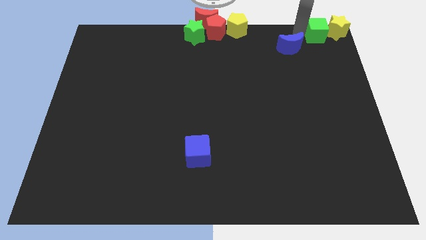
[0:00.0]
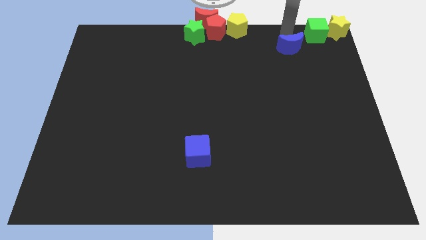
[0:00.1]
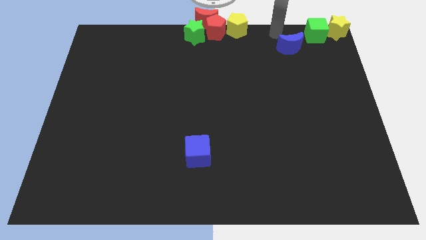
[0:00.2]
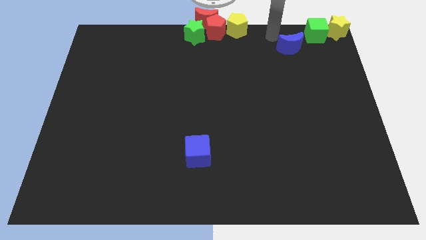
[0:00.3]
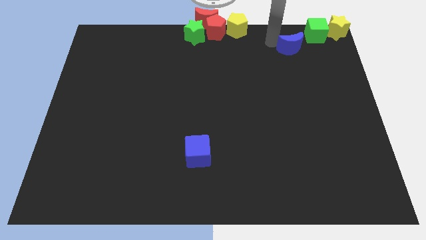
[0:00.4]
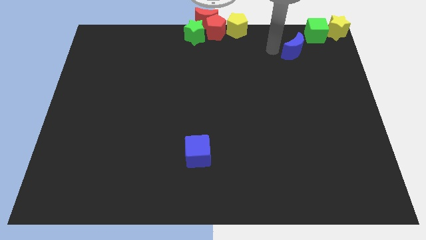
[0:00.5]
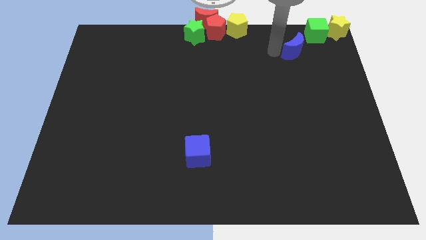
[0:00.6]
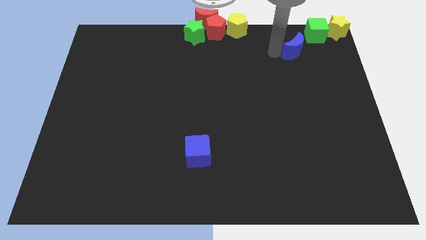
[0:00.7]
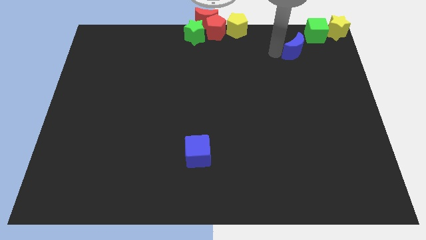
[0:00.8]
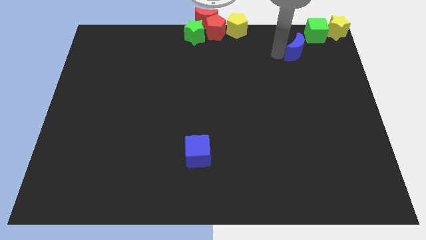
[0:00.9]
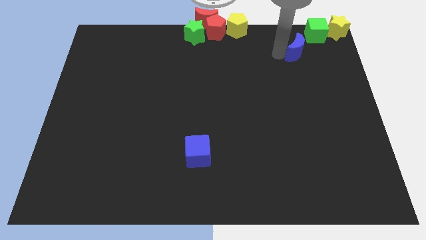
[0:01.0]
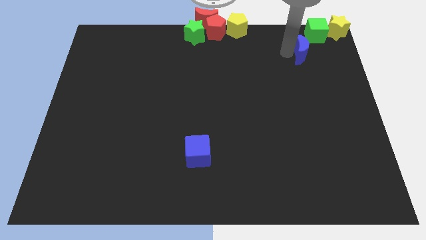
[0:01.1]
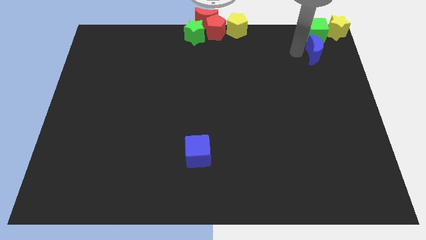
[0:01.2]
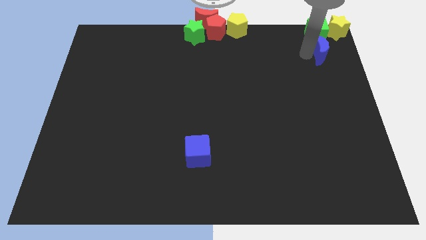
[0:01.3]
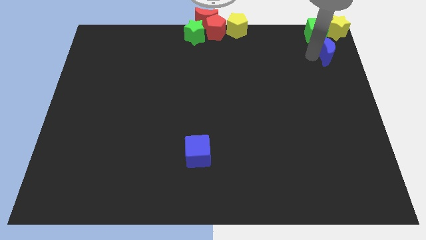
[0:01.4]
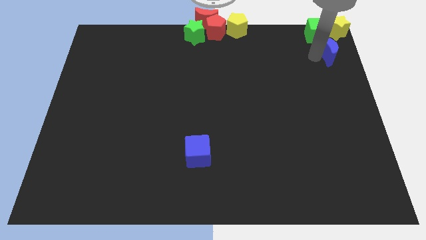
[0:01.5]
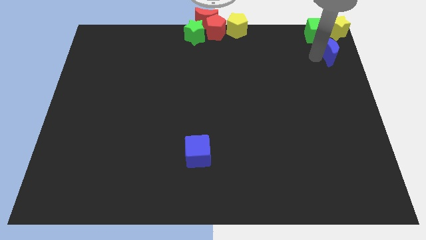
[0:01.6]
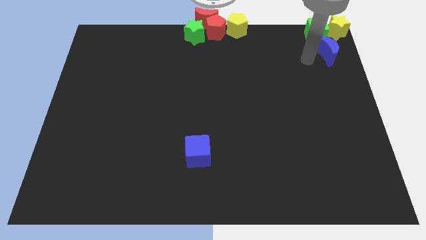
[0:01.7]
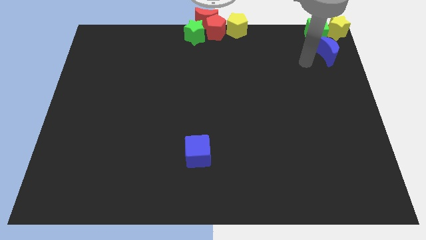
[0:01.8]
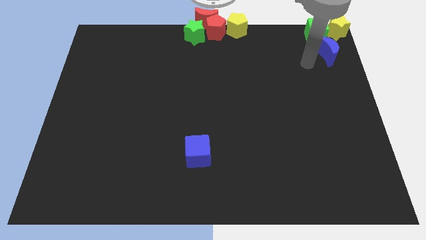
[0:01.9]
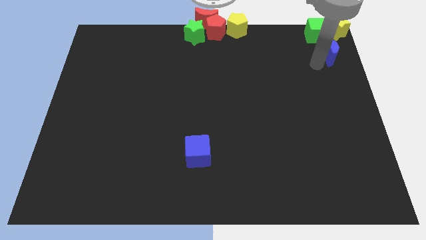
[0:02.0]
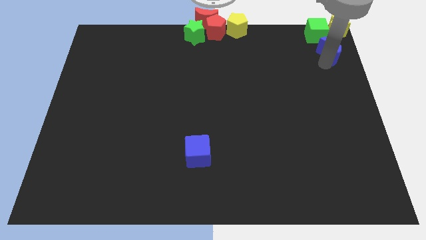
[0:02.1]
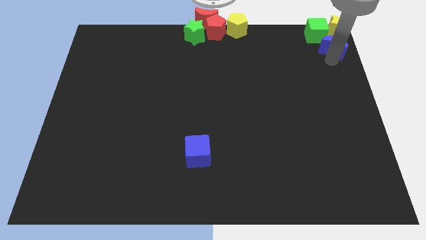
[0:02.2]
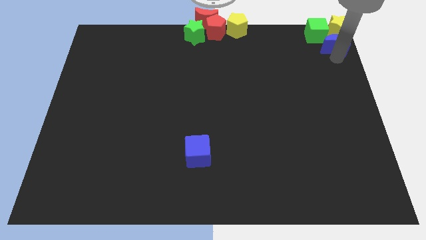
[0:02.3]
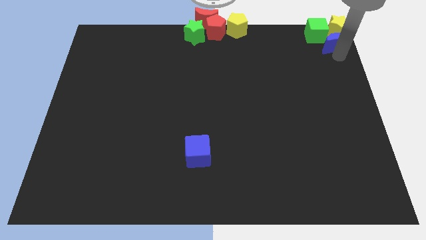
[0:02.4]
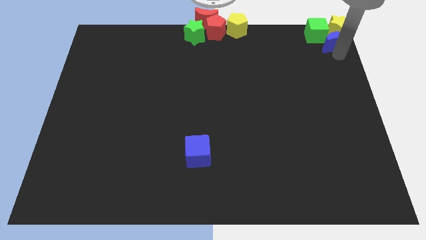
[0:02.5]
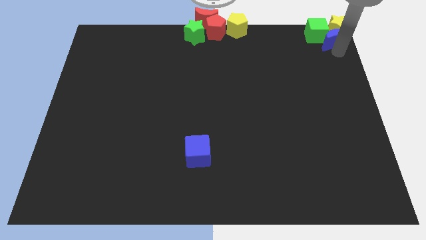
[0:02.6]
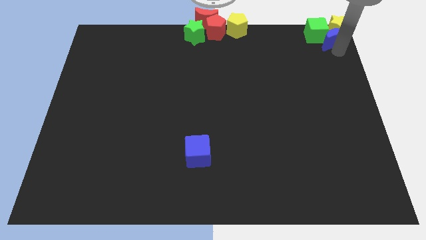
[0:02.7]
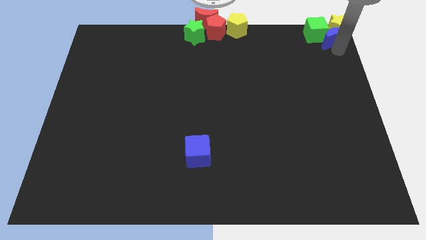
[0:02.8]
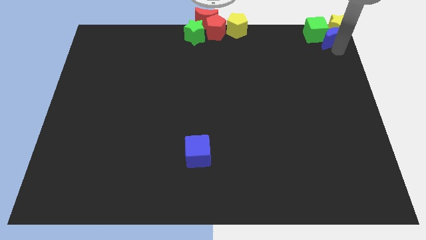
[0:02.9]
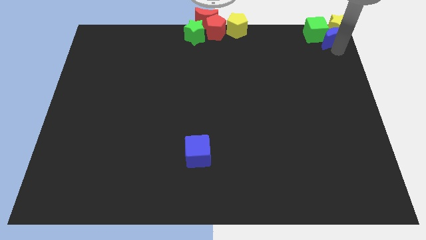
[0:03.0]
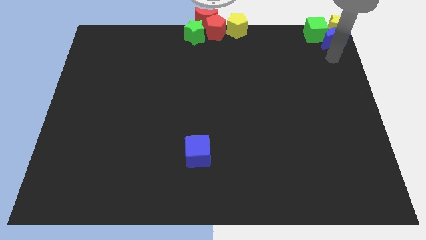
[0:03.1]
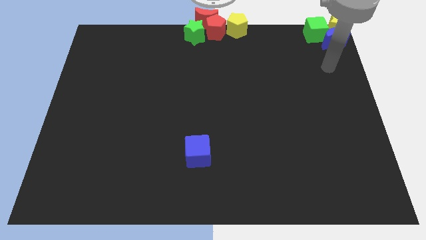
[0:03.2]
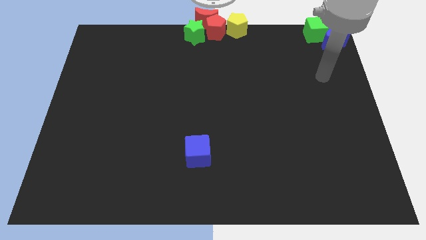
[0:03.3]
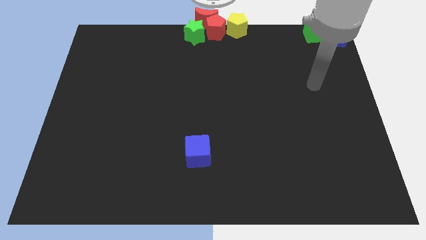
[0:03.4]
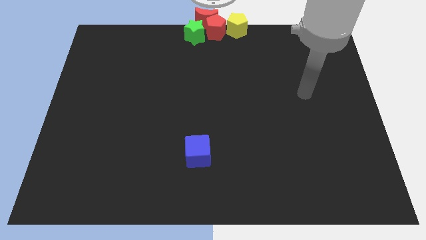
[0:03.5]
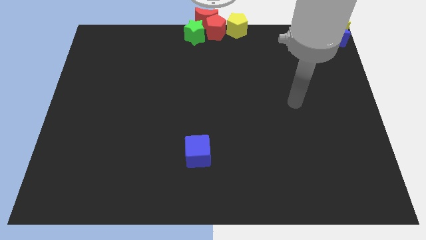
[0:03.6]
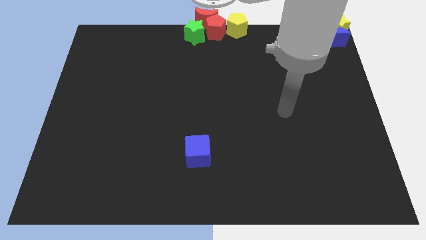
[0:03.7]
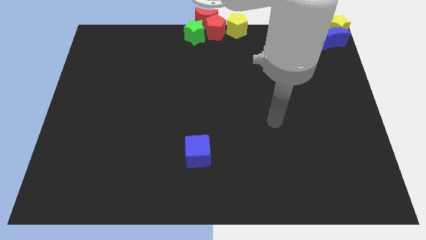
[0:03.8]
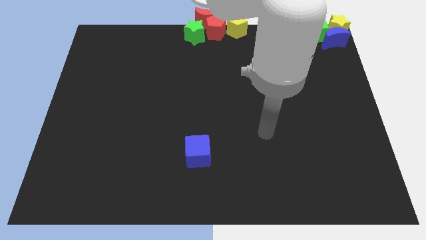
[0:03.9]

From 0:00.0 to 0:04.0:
push the blue crescent to the bottom of the yellow star

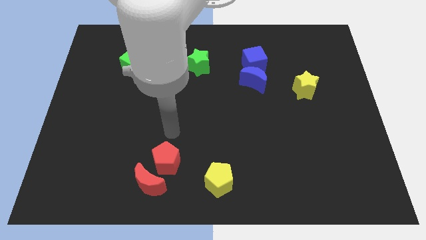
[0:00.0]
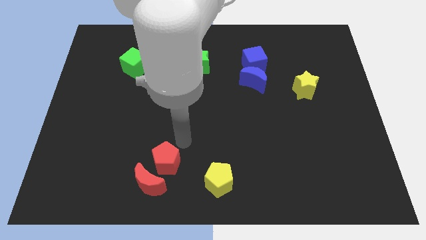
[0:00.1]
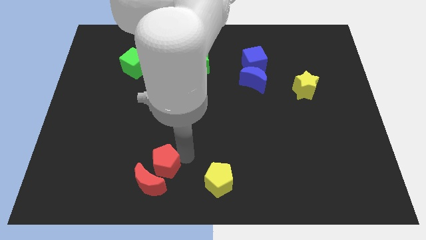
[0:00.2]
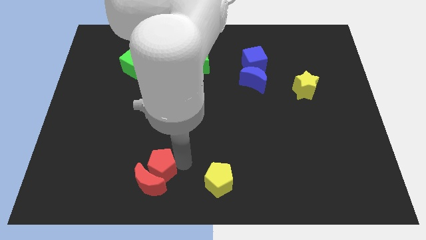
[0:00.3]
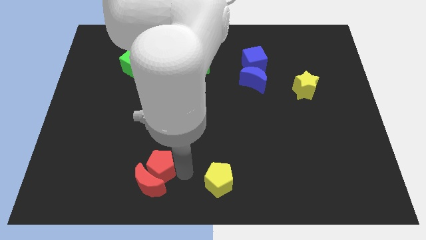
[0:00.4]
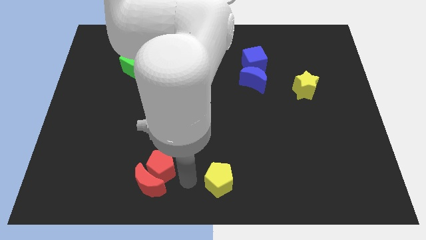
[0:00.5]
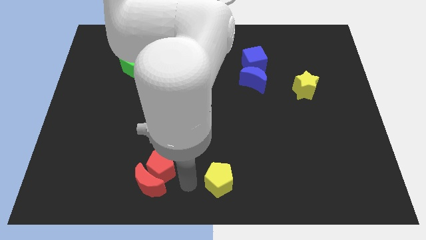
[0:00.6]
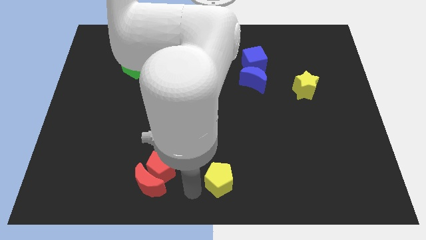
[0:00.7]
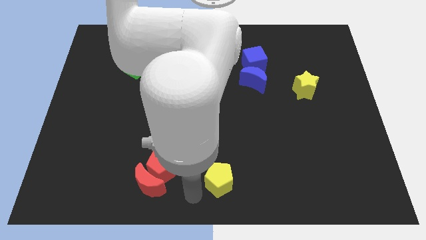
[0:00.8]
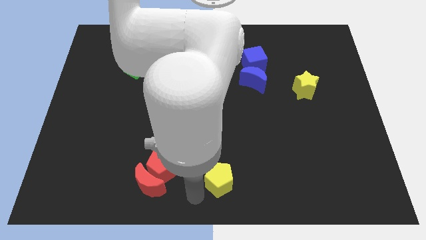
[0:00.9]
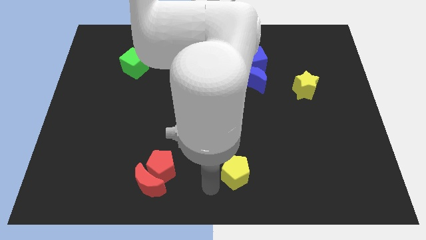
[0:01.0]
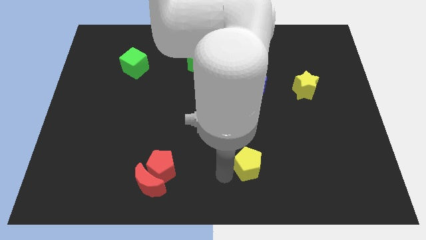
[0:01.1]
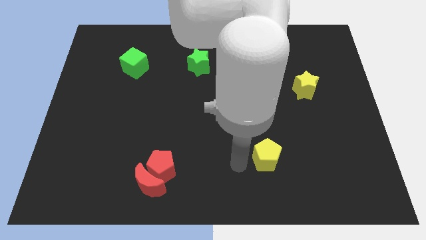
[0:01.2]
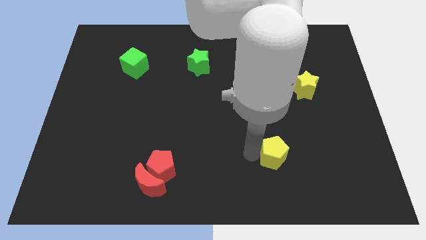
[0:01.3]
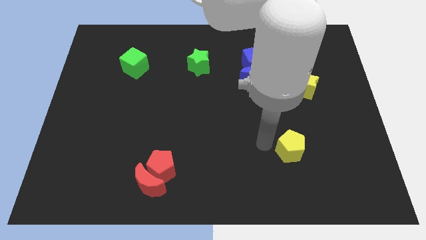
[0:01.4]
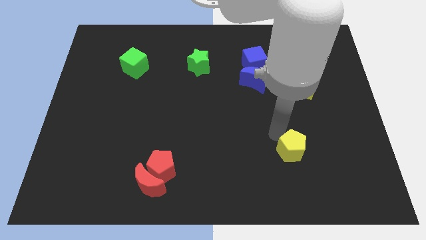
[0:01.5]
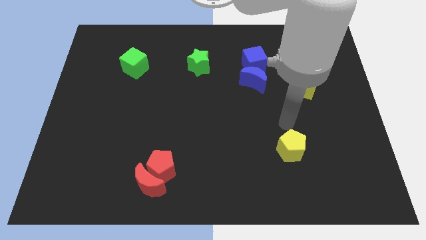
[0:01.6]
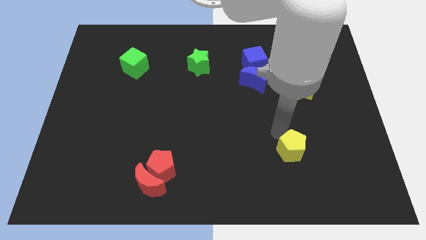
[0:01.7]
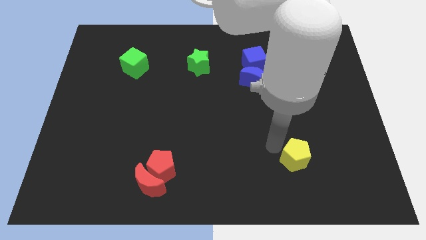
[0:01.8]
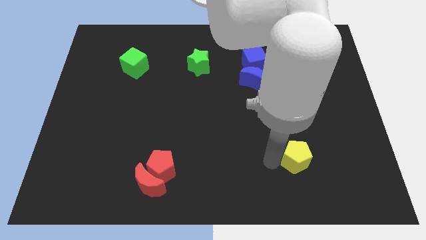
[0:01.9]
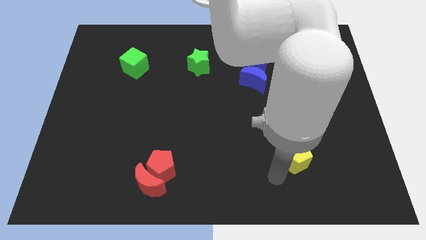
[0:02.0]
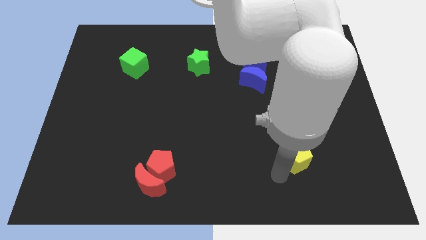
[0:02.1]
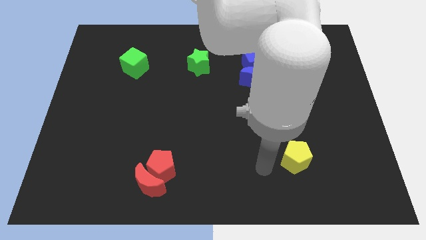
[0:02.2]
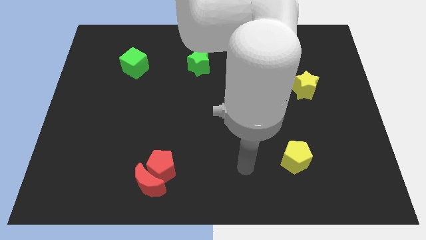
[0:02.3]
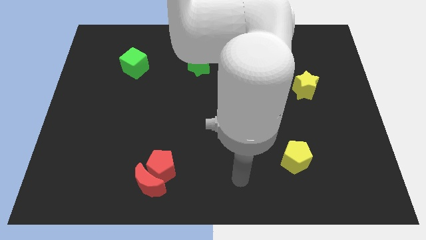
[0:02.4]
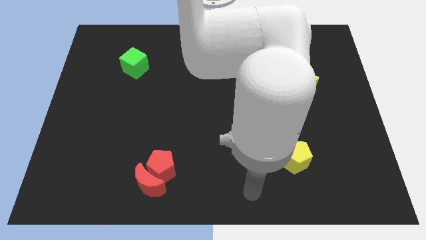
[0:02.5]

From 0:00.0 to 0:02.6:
place the yellow pentagon towards center right

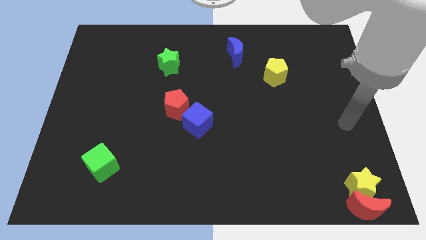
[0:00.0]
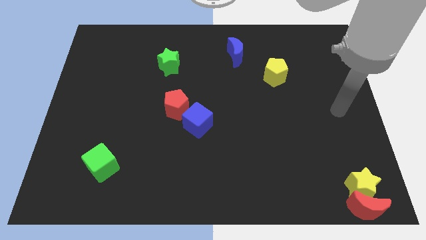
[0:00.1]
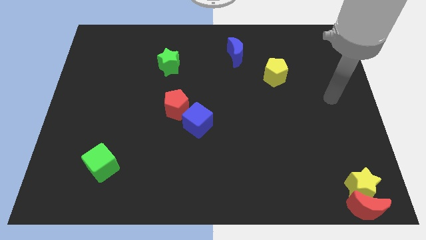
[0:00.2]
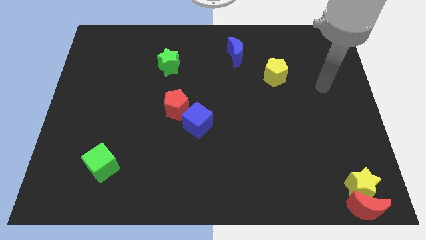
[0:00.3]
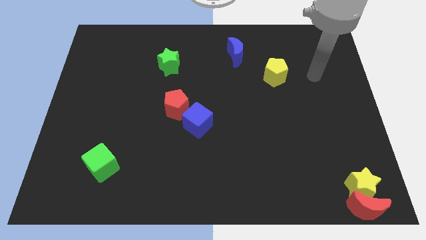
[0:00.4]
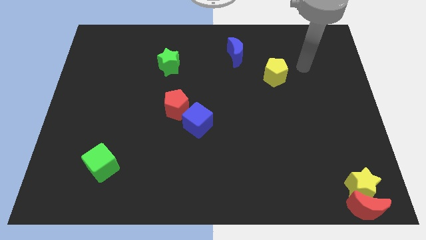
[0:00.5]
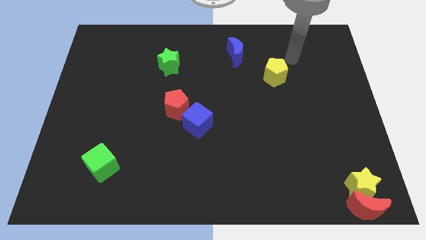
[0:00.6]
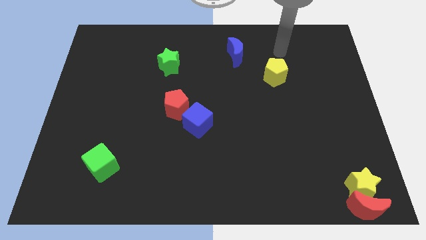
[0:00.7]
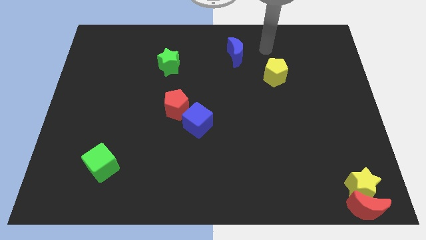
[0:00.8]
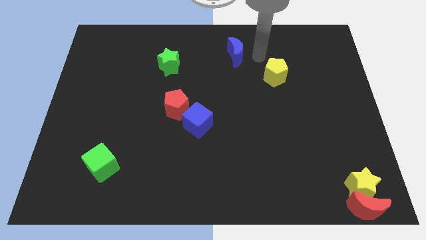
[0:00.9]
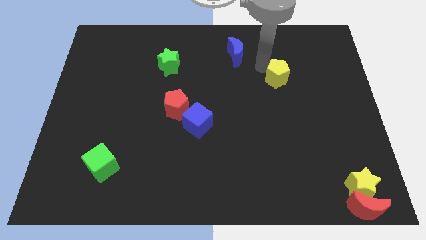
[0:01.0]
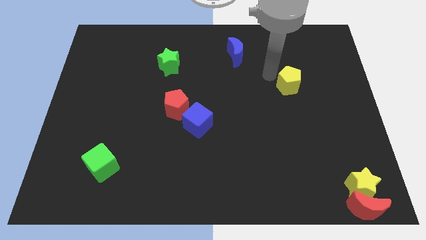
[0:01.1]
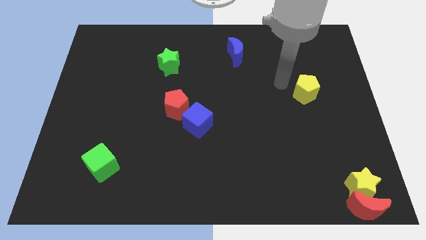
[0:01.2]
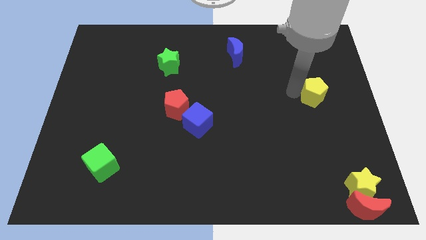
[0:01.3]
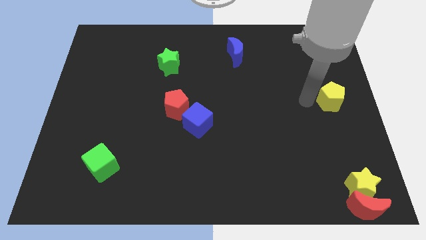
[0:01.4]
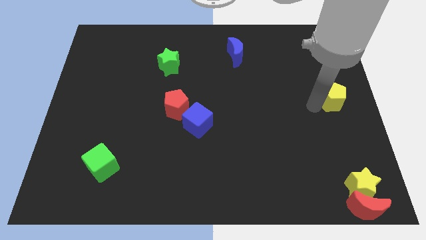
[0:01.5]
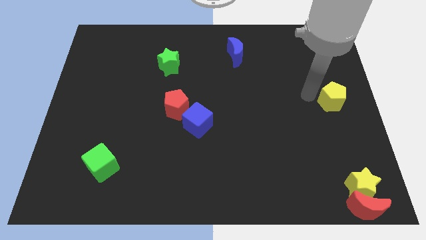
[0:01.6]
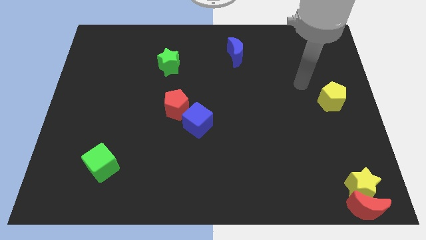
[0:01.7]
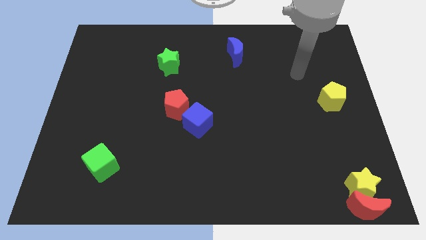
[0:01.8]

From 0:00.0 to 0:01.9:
move yellow pentagon to the center right

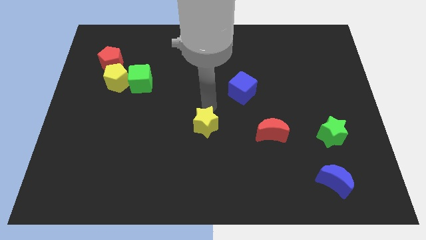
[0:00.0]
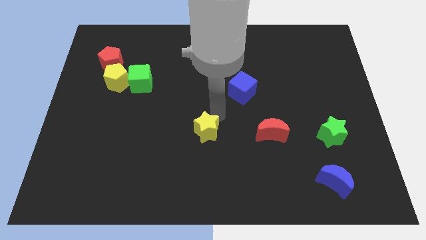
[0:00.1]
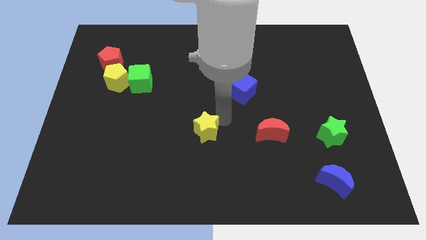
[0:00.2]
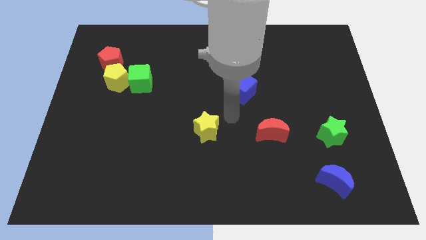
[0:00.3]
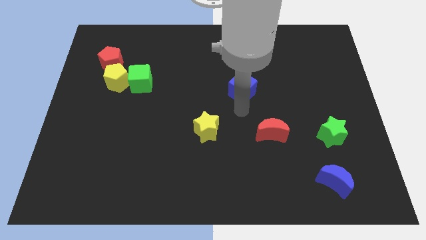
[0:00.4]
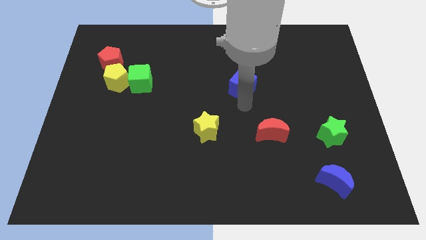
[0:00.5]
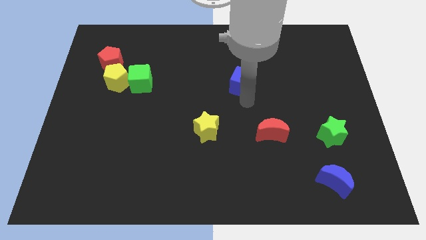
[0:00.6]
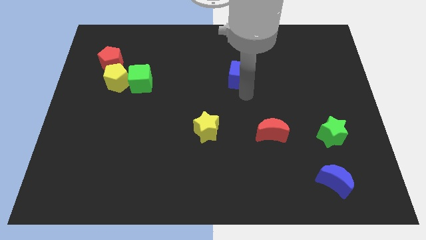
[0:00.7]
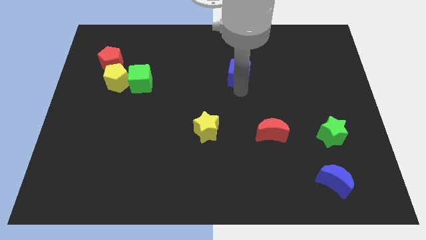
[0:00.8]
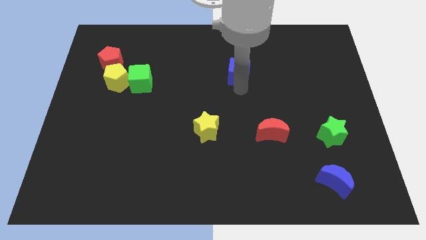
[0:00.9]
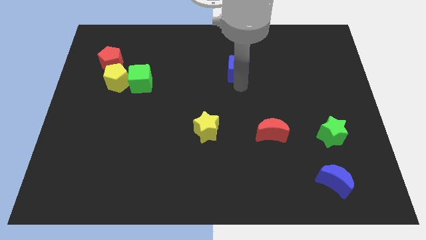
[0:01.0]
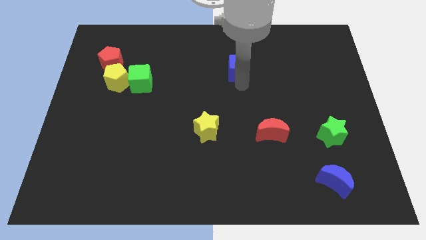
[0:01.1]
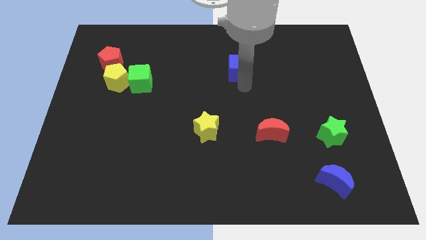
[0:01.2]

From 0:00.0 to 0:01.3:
push yellow star and blue cube slightly
